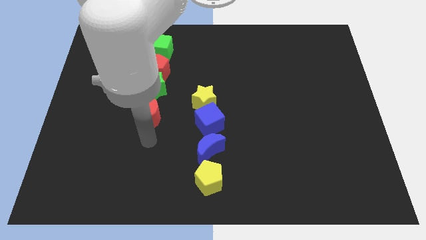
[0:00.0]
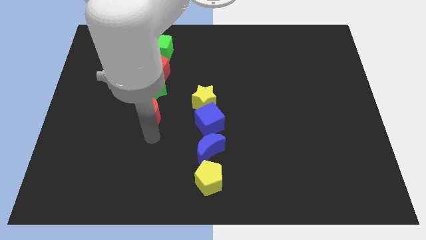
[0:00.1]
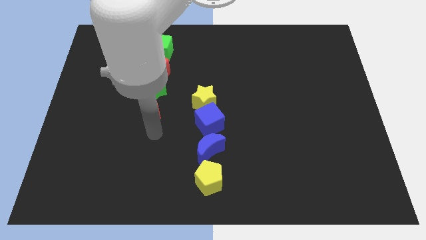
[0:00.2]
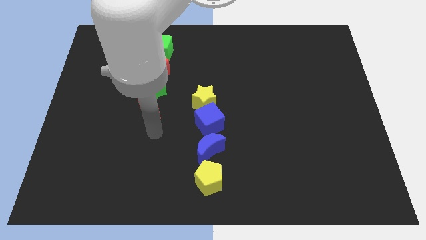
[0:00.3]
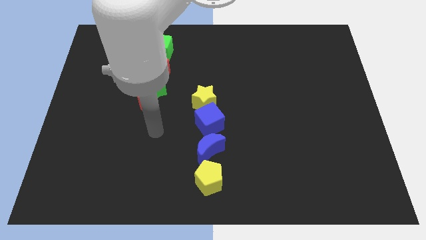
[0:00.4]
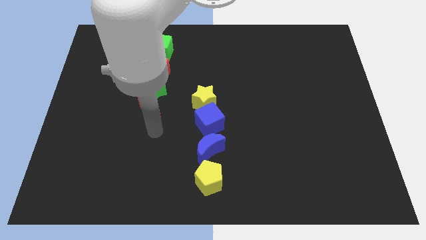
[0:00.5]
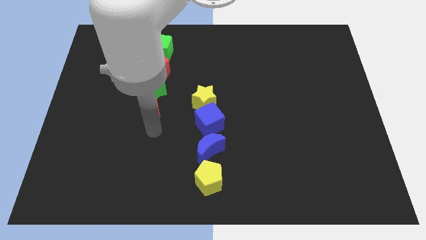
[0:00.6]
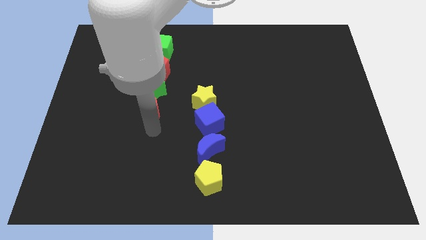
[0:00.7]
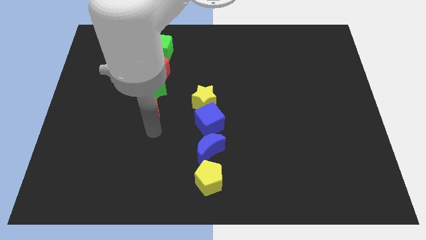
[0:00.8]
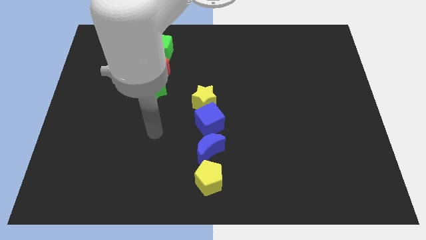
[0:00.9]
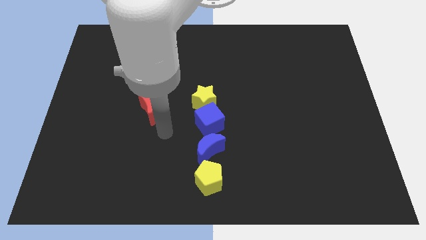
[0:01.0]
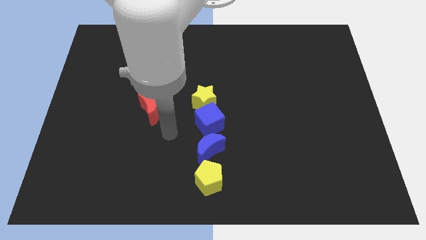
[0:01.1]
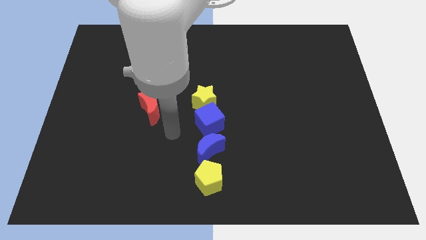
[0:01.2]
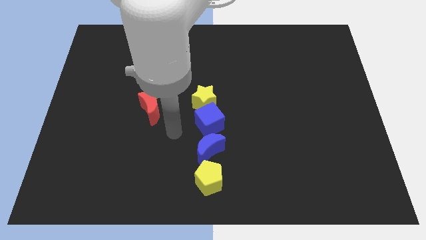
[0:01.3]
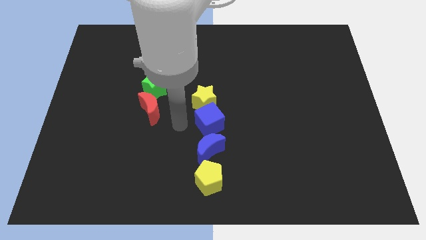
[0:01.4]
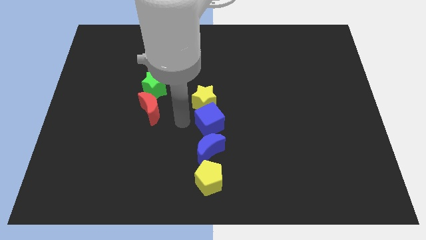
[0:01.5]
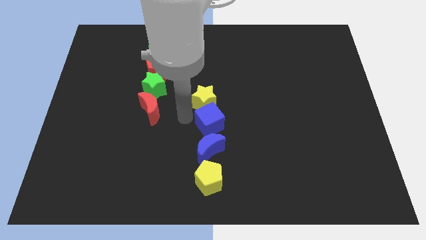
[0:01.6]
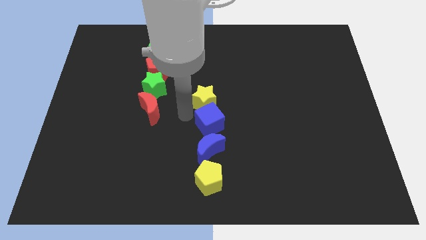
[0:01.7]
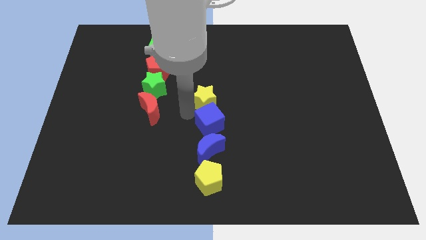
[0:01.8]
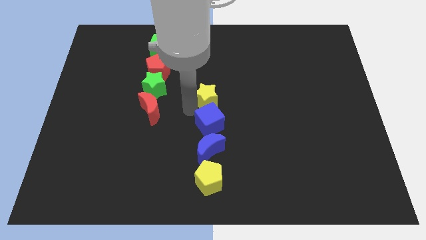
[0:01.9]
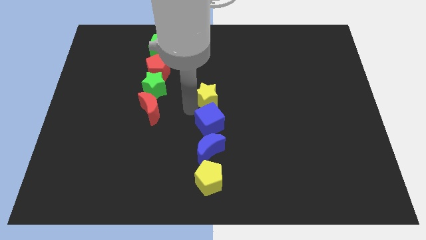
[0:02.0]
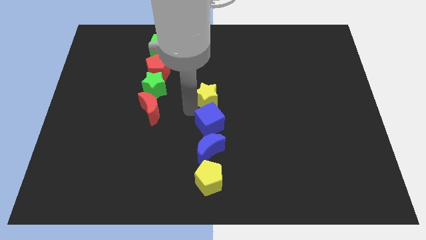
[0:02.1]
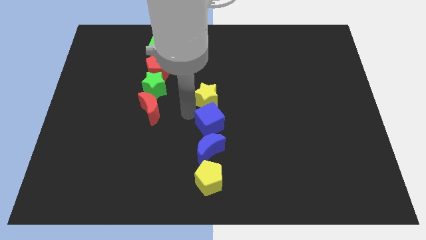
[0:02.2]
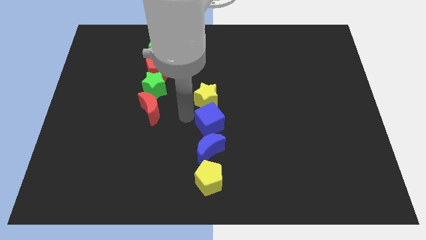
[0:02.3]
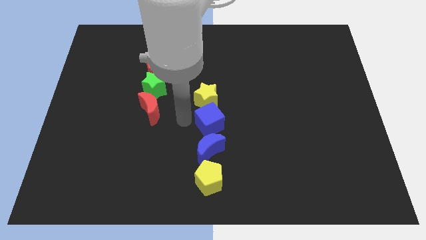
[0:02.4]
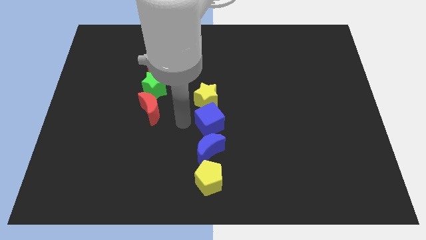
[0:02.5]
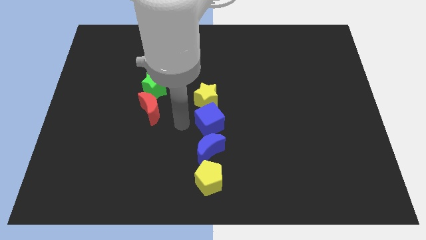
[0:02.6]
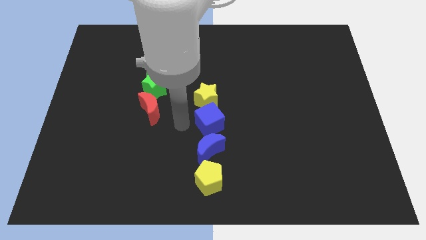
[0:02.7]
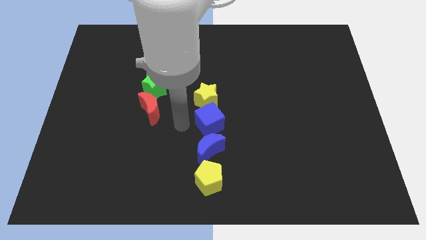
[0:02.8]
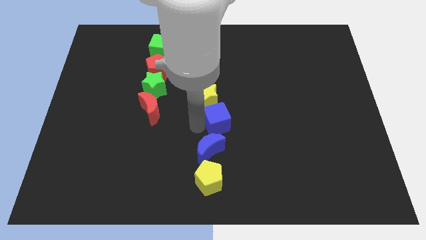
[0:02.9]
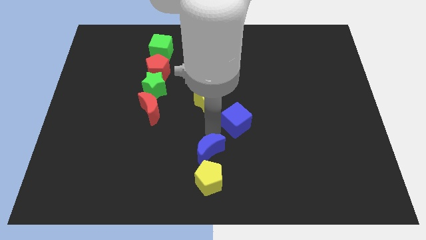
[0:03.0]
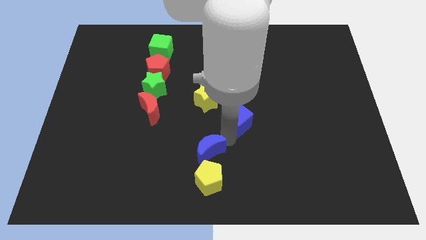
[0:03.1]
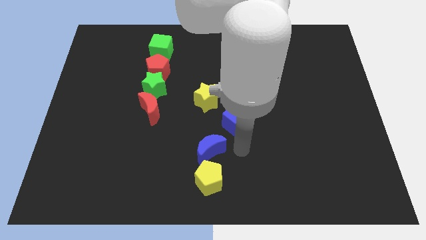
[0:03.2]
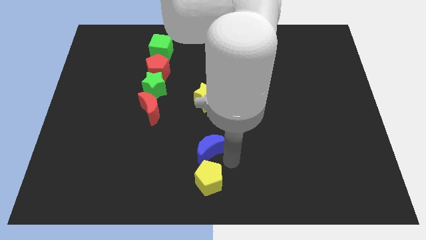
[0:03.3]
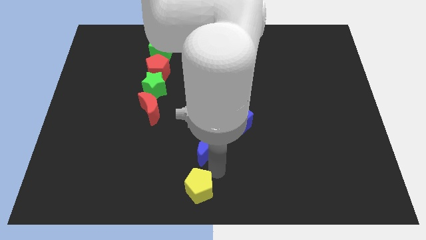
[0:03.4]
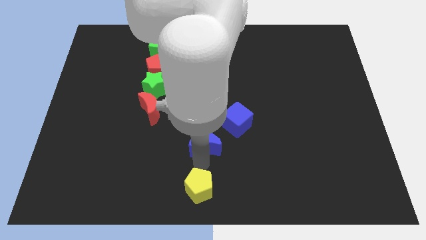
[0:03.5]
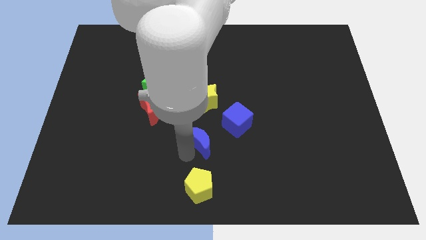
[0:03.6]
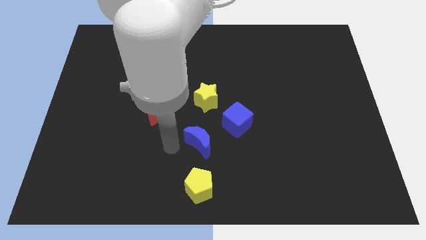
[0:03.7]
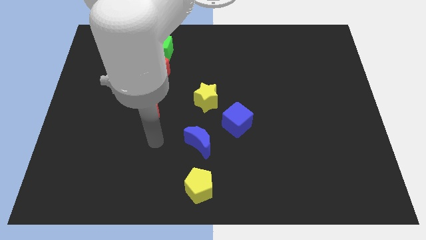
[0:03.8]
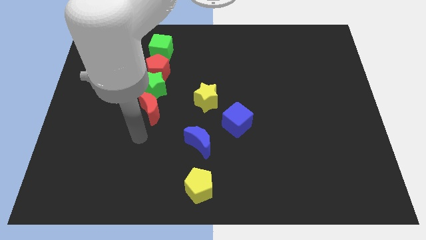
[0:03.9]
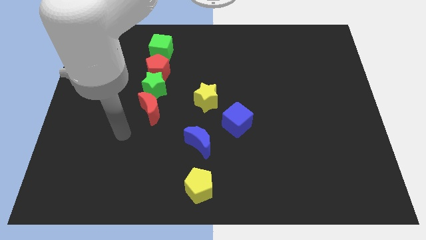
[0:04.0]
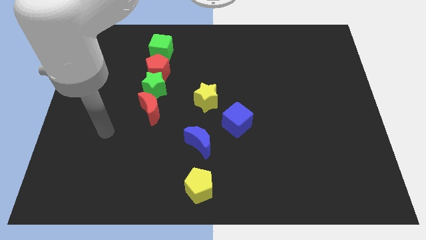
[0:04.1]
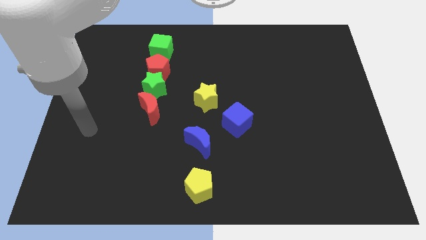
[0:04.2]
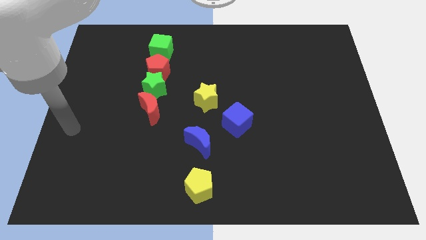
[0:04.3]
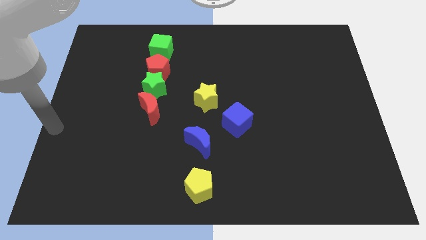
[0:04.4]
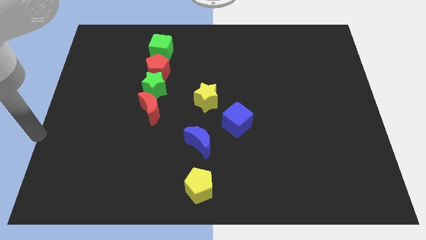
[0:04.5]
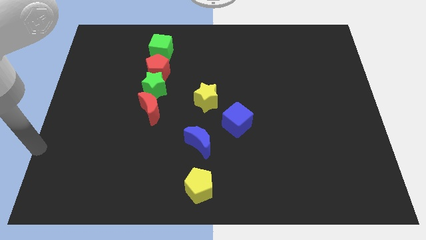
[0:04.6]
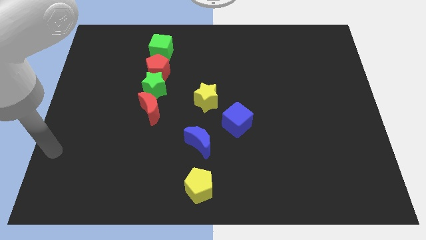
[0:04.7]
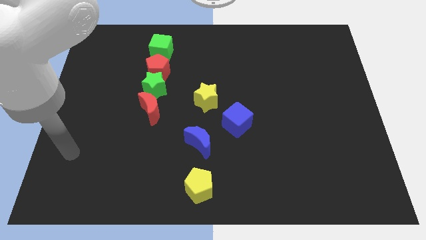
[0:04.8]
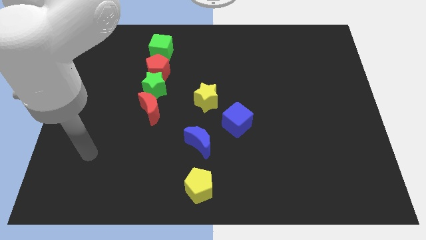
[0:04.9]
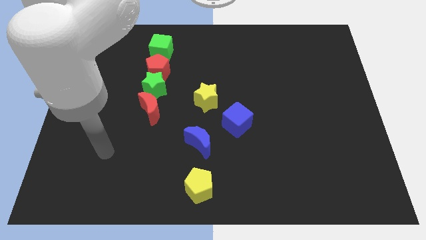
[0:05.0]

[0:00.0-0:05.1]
disturb the row formed by two yellow and two blue blocks

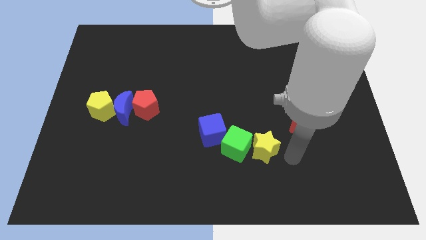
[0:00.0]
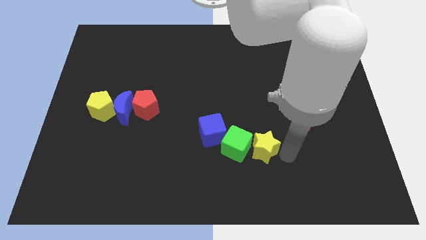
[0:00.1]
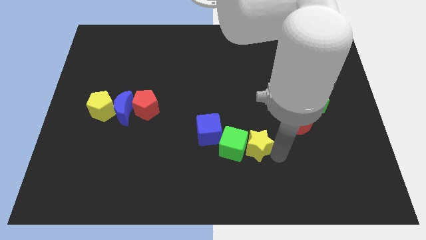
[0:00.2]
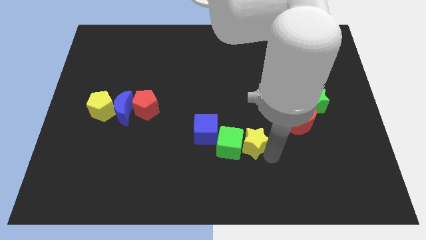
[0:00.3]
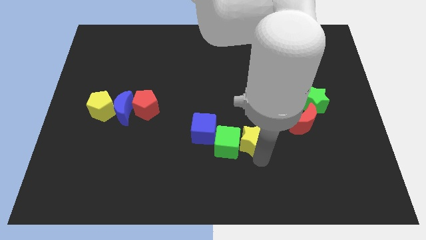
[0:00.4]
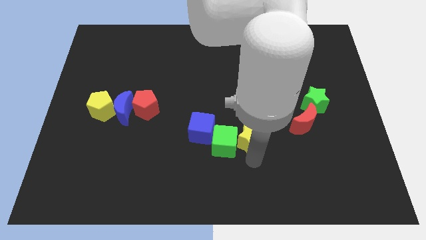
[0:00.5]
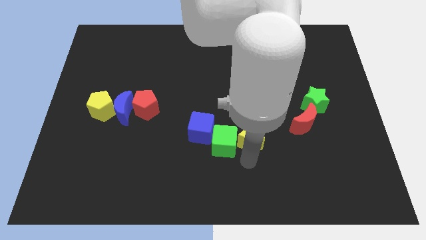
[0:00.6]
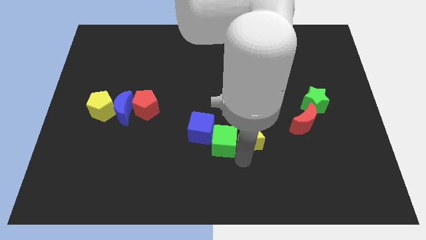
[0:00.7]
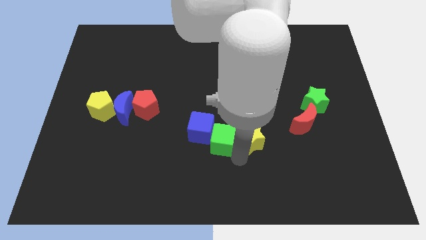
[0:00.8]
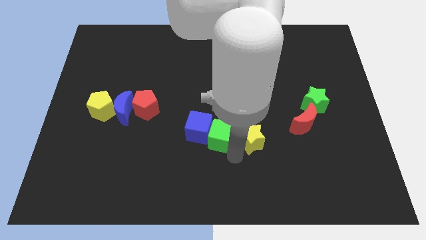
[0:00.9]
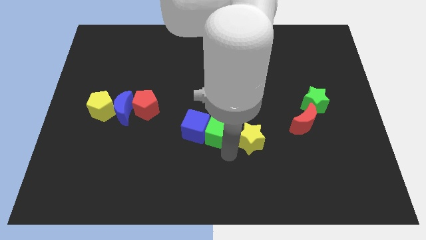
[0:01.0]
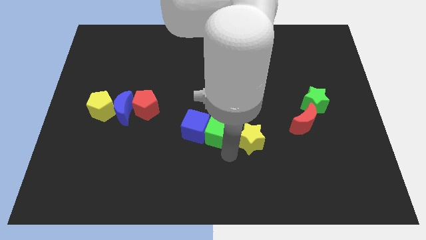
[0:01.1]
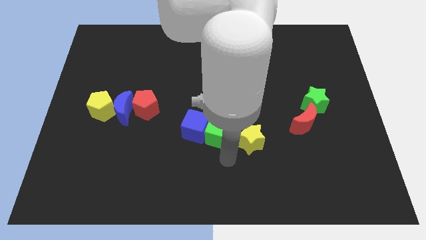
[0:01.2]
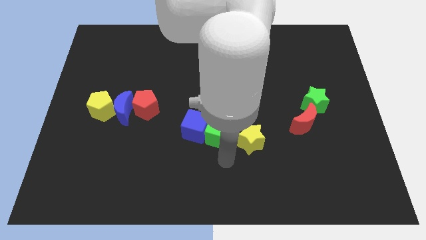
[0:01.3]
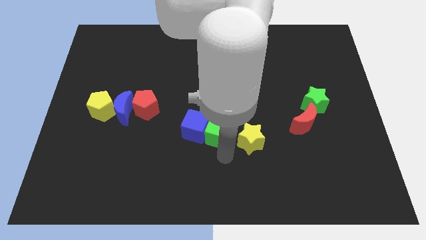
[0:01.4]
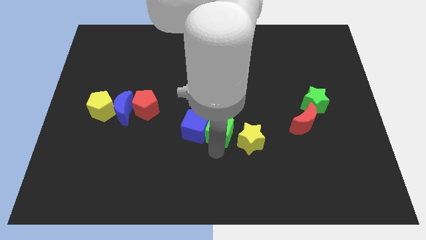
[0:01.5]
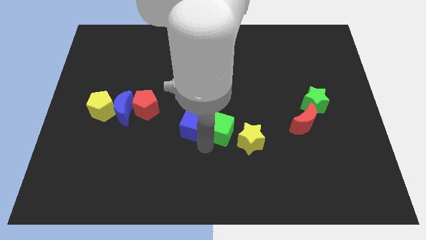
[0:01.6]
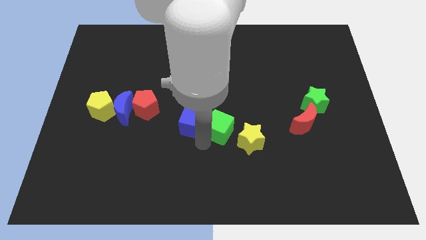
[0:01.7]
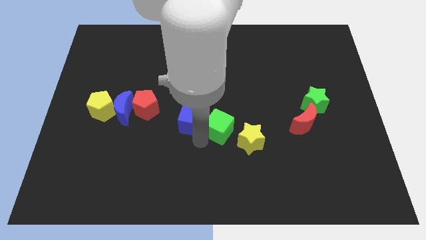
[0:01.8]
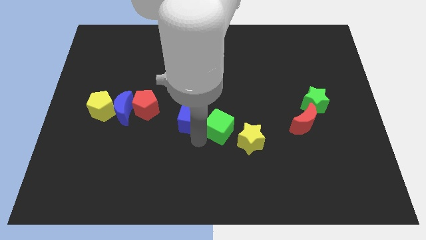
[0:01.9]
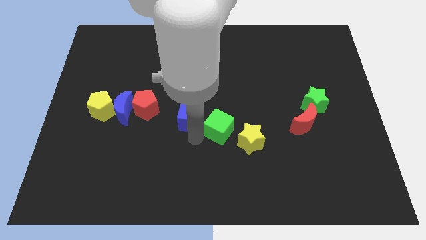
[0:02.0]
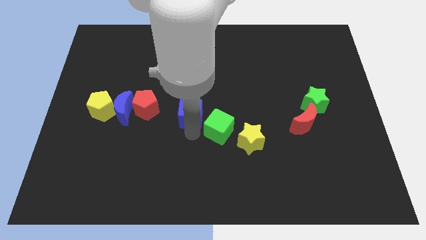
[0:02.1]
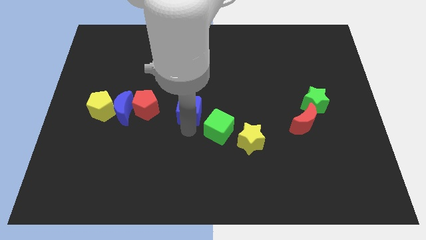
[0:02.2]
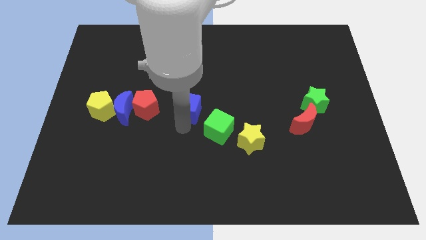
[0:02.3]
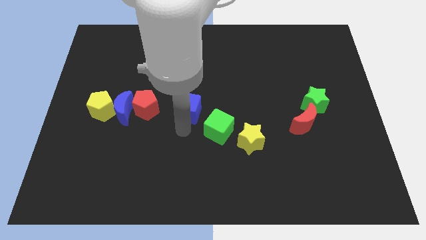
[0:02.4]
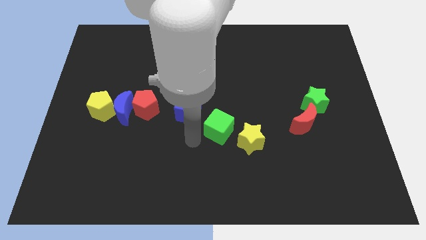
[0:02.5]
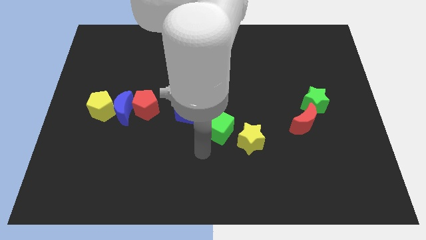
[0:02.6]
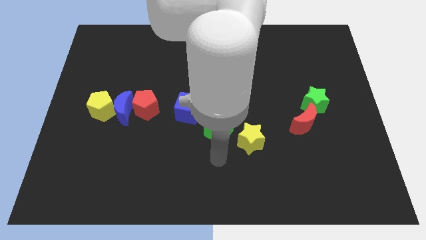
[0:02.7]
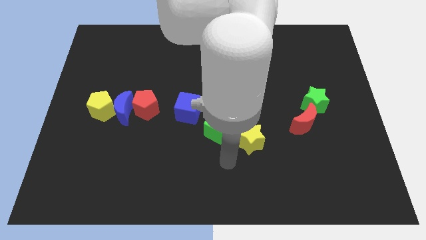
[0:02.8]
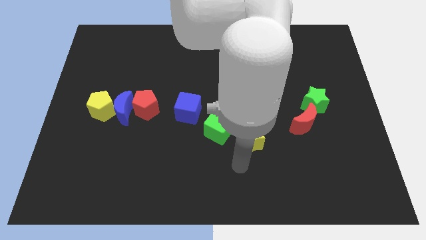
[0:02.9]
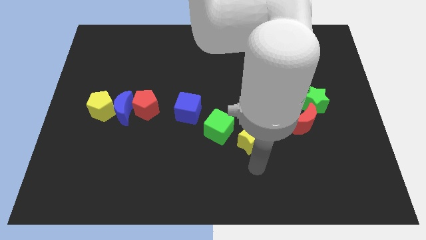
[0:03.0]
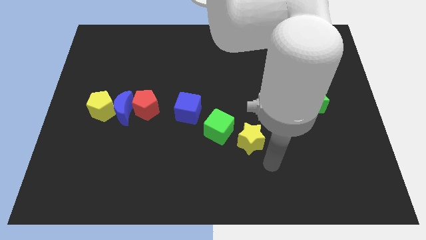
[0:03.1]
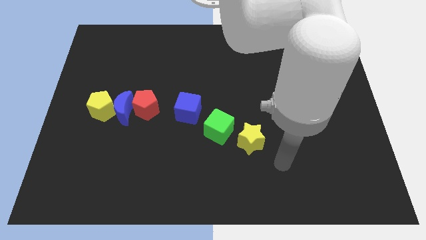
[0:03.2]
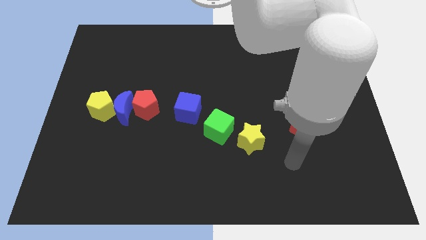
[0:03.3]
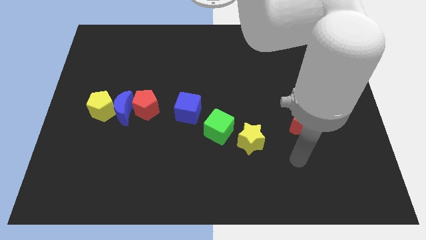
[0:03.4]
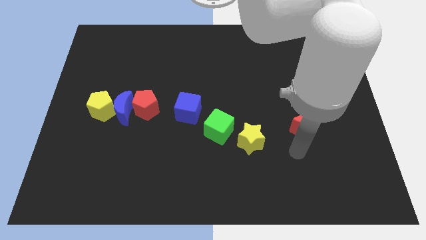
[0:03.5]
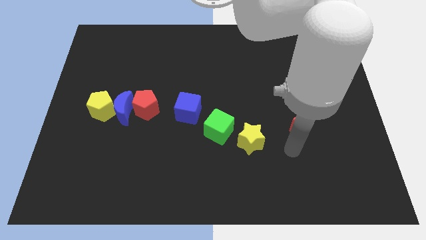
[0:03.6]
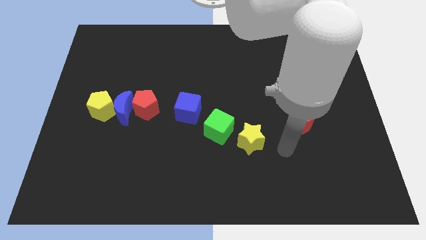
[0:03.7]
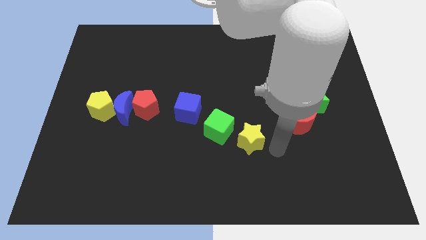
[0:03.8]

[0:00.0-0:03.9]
push the blue cube to the right of the red pentagon
